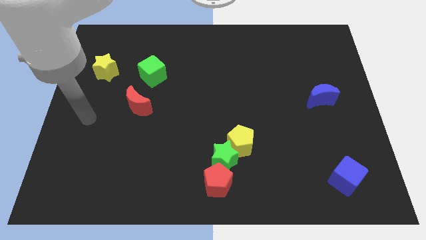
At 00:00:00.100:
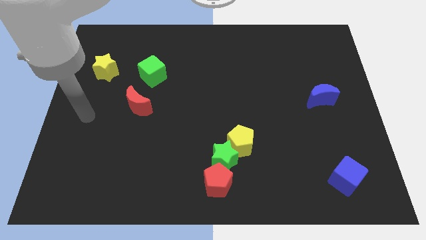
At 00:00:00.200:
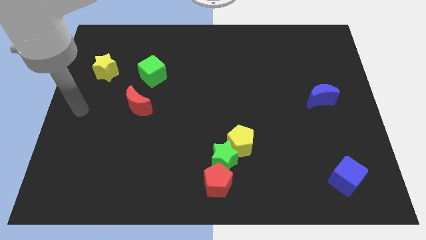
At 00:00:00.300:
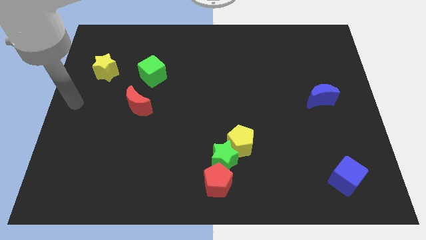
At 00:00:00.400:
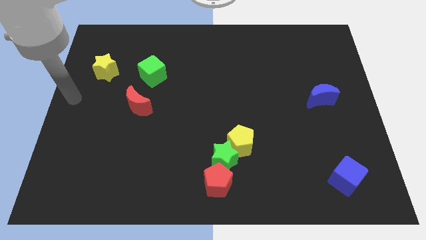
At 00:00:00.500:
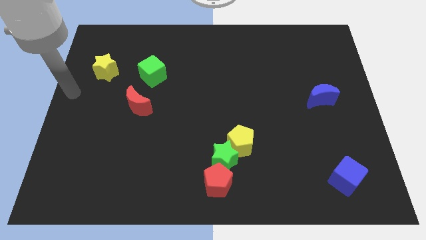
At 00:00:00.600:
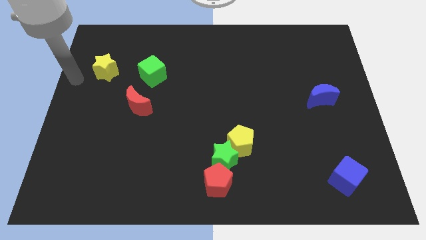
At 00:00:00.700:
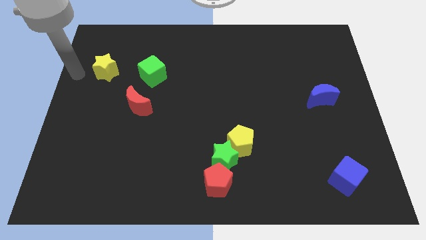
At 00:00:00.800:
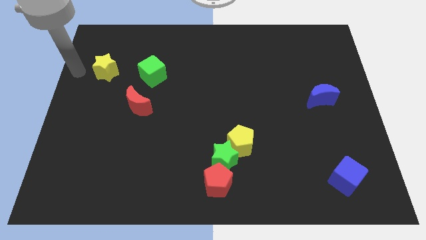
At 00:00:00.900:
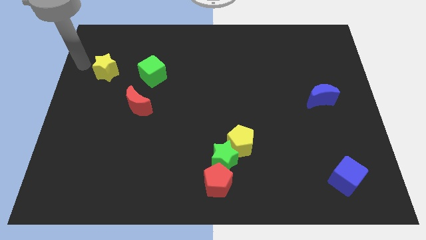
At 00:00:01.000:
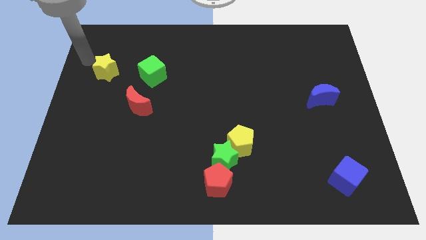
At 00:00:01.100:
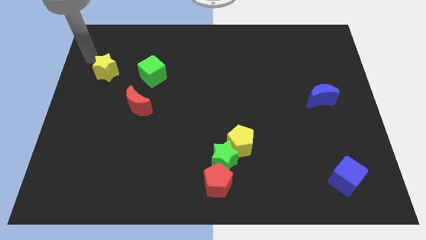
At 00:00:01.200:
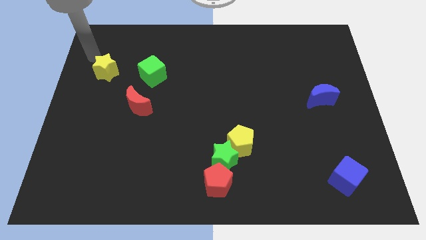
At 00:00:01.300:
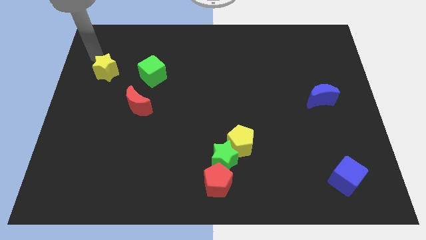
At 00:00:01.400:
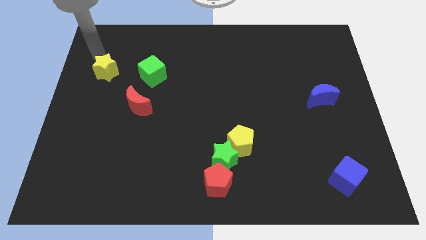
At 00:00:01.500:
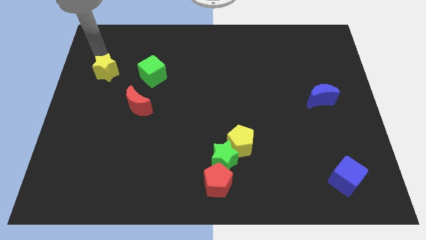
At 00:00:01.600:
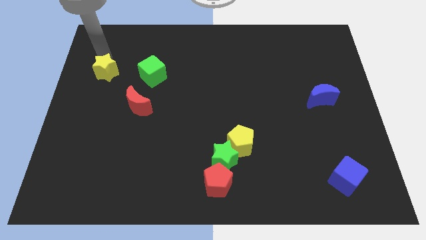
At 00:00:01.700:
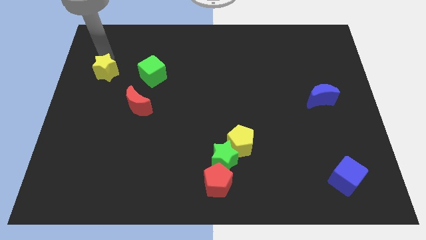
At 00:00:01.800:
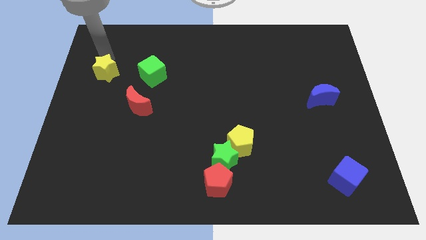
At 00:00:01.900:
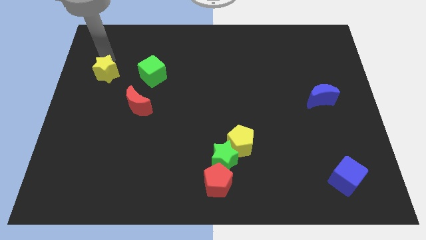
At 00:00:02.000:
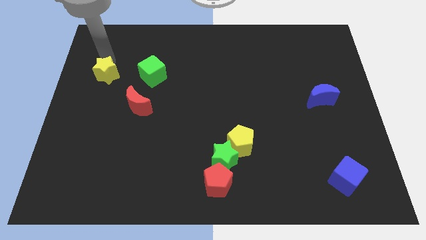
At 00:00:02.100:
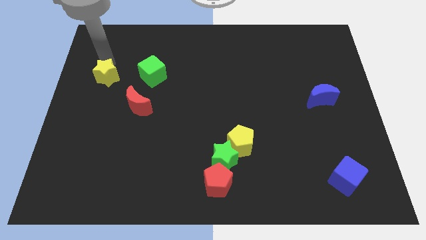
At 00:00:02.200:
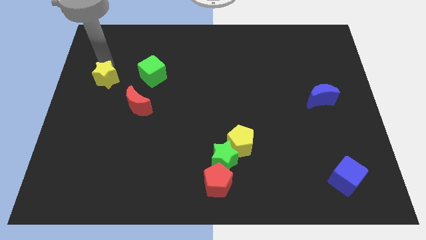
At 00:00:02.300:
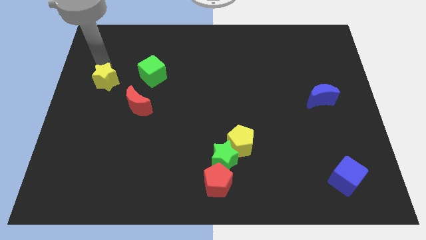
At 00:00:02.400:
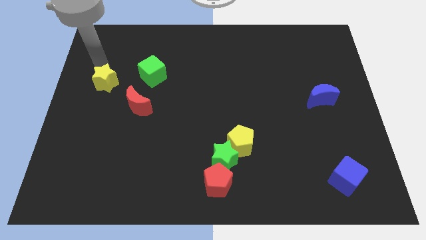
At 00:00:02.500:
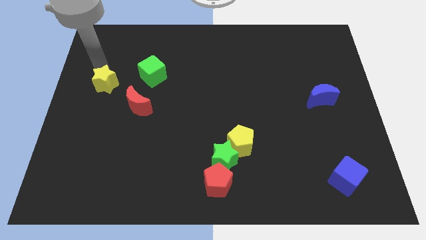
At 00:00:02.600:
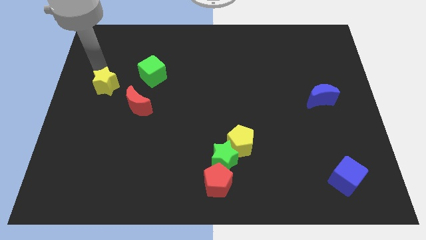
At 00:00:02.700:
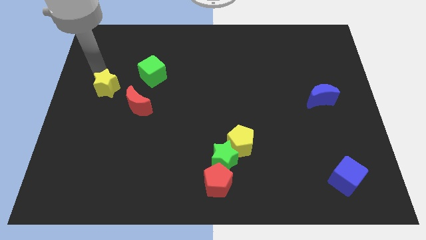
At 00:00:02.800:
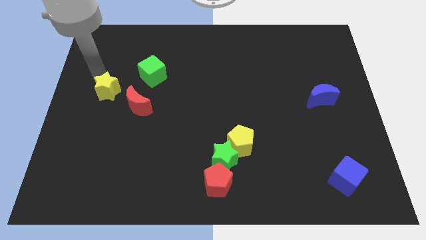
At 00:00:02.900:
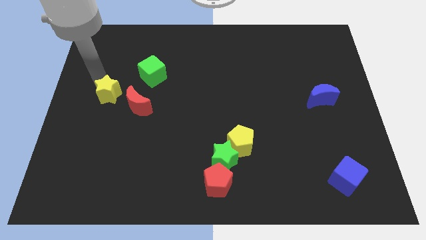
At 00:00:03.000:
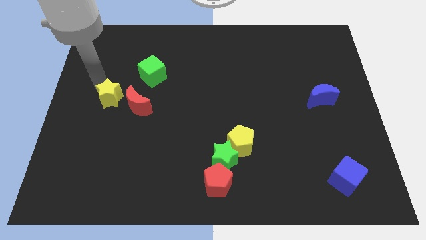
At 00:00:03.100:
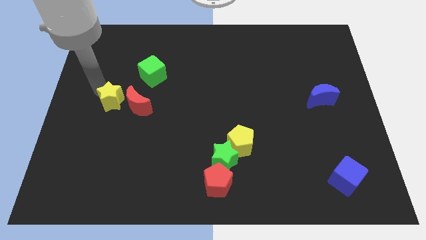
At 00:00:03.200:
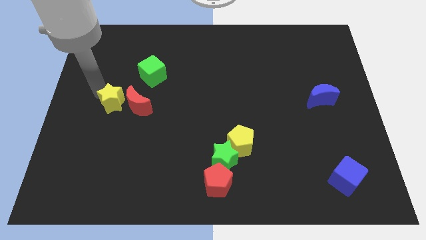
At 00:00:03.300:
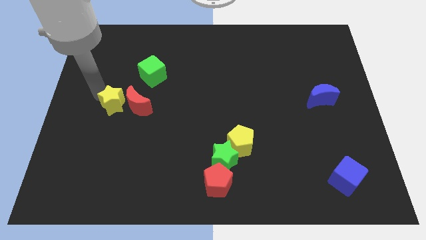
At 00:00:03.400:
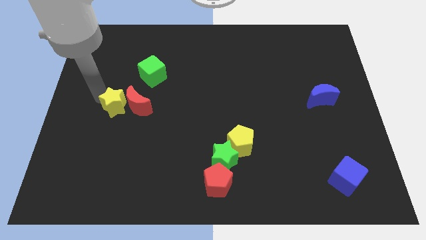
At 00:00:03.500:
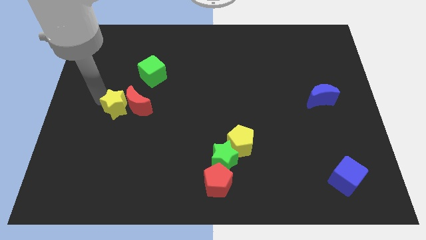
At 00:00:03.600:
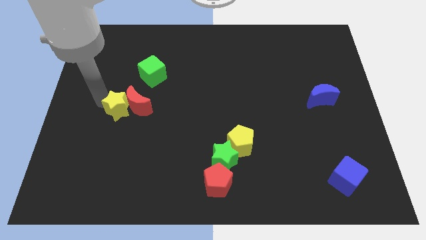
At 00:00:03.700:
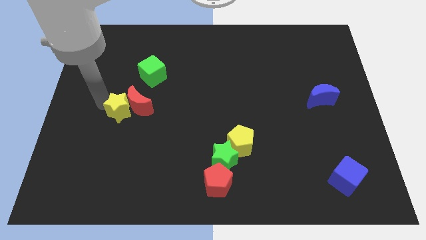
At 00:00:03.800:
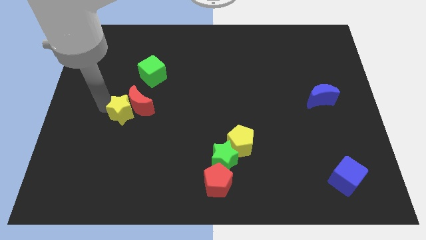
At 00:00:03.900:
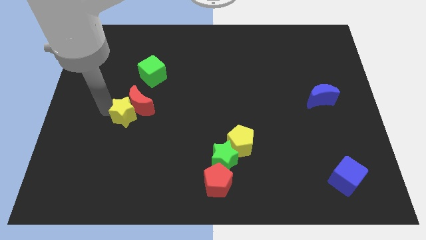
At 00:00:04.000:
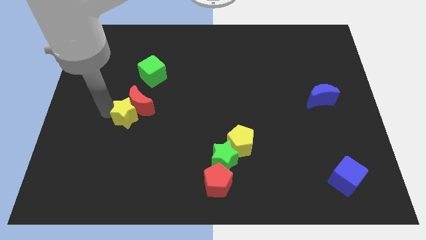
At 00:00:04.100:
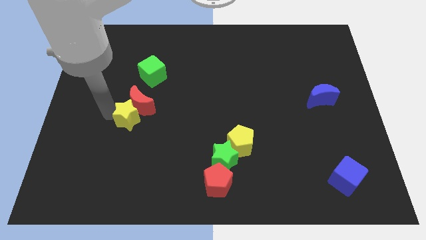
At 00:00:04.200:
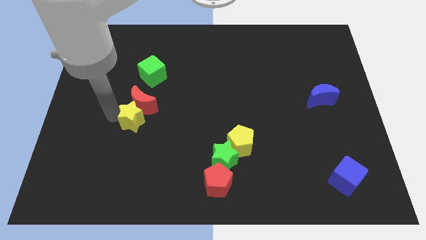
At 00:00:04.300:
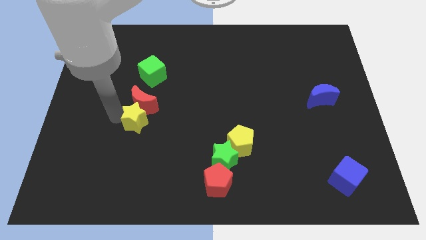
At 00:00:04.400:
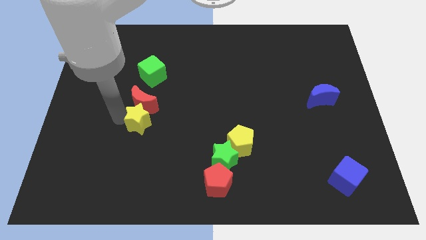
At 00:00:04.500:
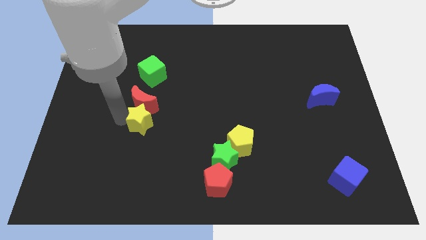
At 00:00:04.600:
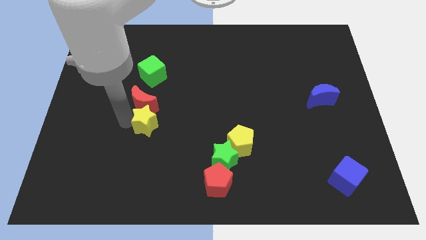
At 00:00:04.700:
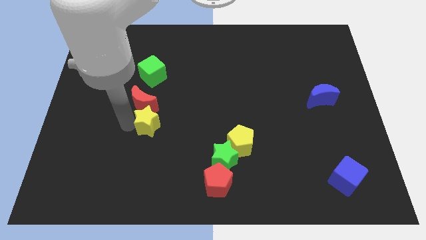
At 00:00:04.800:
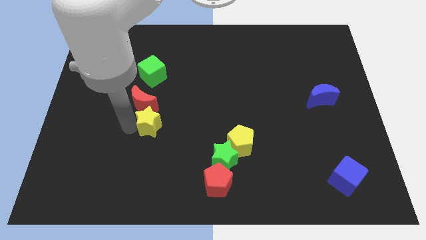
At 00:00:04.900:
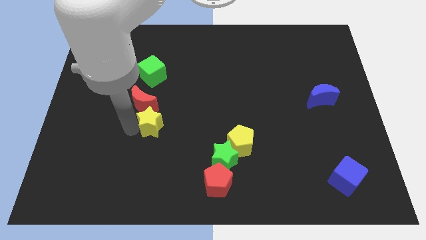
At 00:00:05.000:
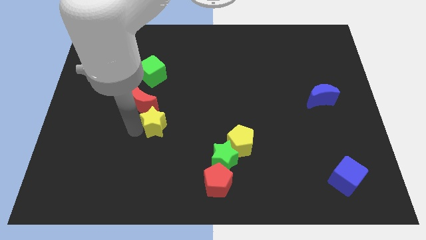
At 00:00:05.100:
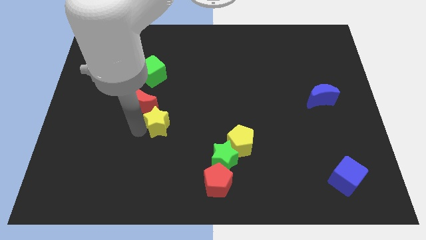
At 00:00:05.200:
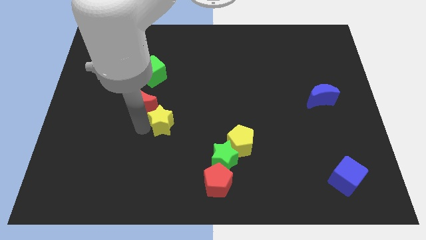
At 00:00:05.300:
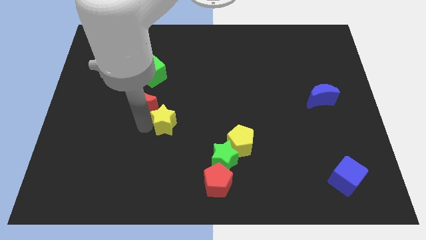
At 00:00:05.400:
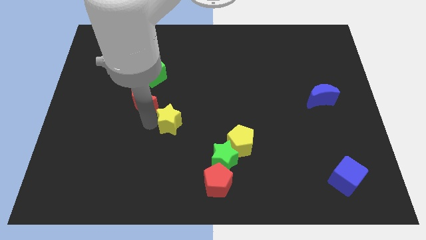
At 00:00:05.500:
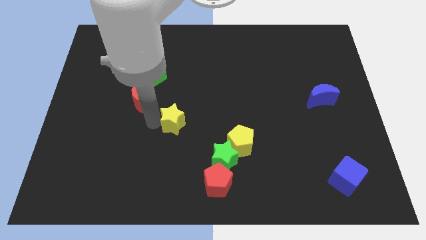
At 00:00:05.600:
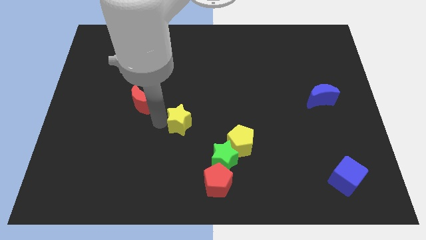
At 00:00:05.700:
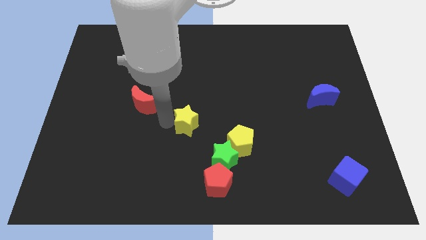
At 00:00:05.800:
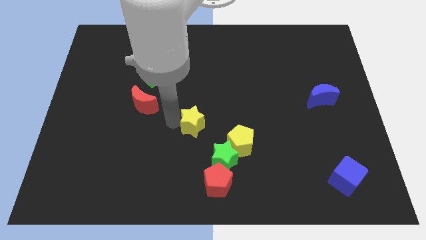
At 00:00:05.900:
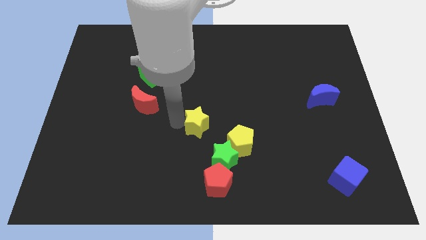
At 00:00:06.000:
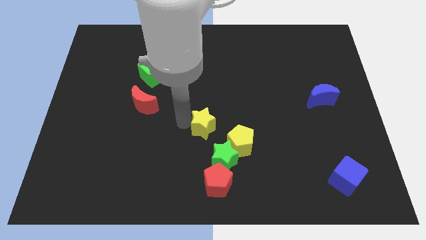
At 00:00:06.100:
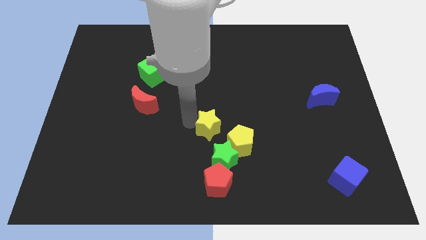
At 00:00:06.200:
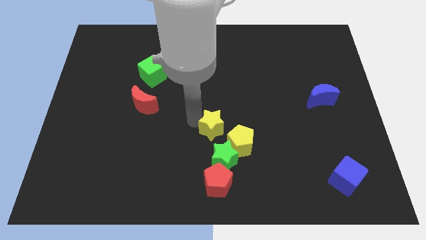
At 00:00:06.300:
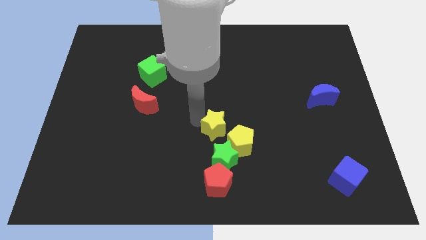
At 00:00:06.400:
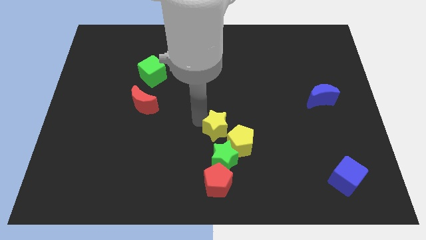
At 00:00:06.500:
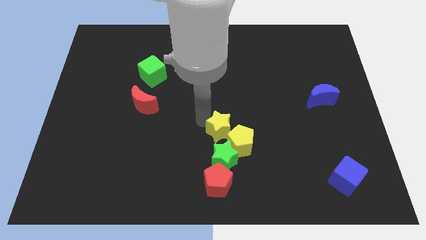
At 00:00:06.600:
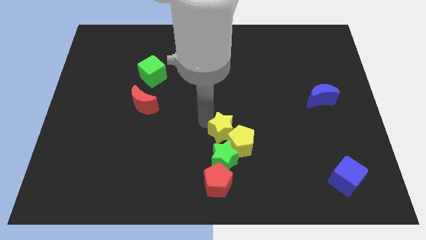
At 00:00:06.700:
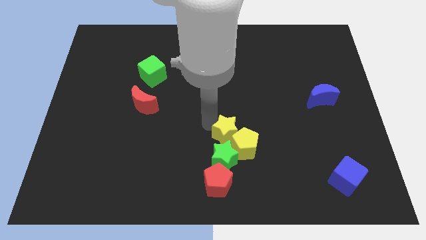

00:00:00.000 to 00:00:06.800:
slide the yellow star close to the yellow pentagon

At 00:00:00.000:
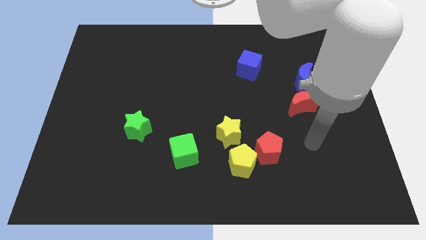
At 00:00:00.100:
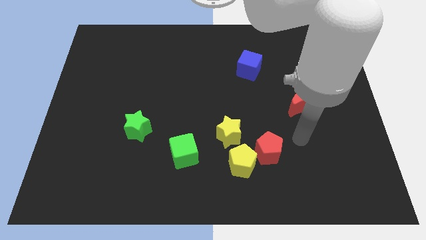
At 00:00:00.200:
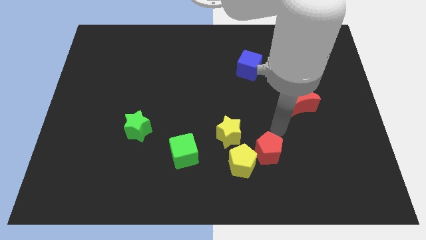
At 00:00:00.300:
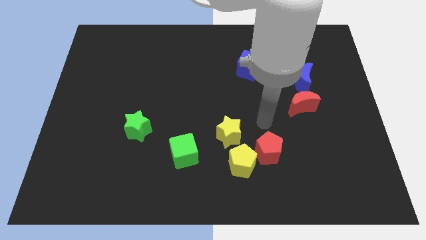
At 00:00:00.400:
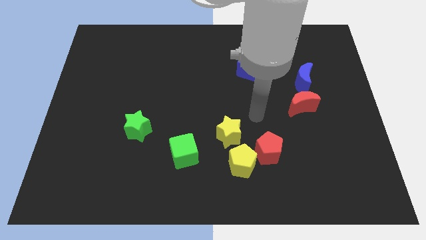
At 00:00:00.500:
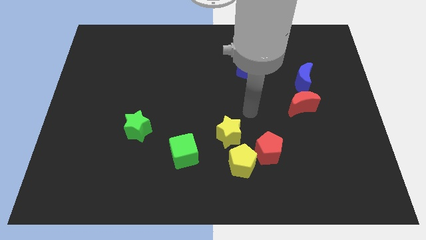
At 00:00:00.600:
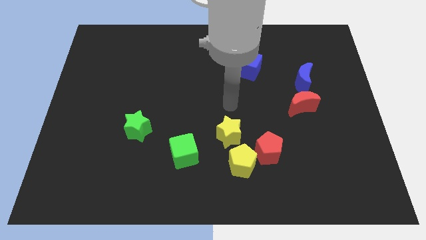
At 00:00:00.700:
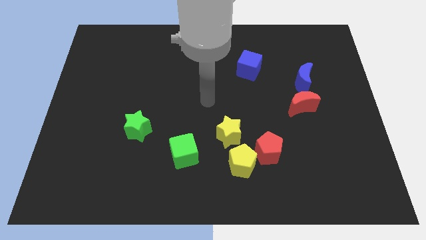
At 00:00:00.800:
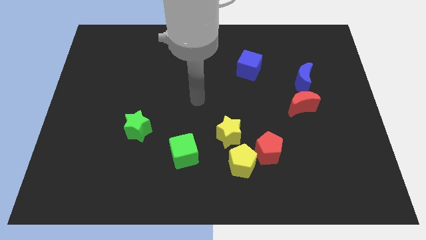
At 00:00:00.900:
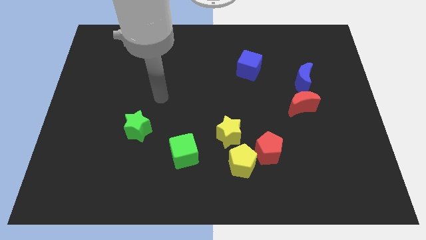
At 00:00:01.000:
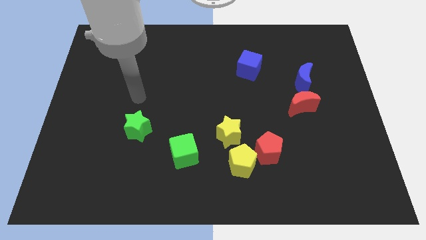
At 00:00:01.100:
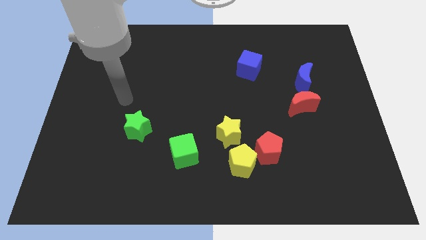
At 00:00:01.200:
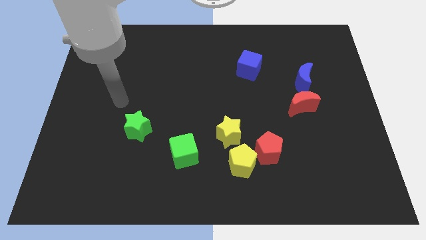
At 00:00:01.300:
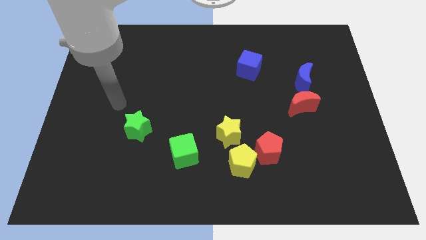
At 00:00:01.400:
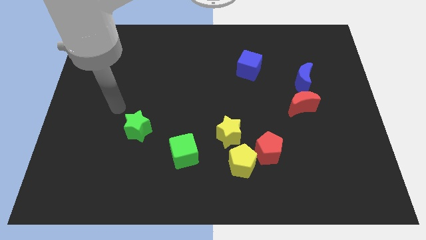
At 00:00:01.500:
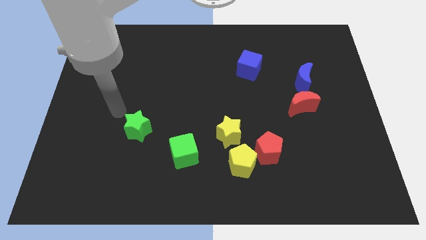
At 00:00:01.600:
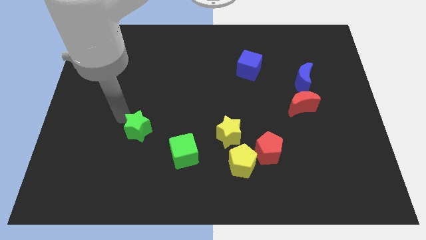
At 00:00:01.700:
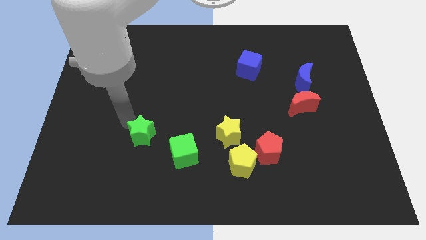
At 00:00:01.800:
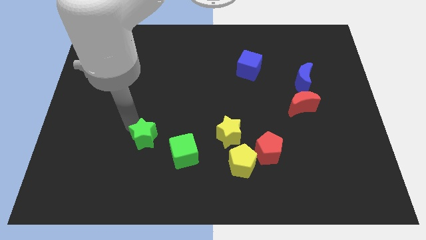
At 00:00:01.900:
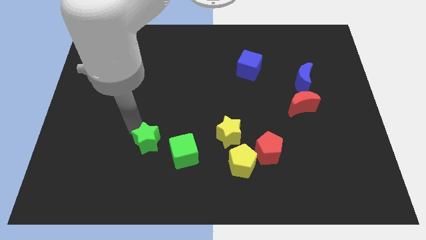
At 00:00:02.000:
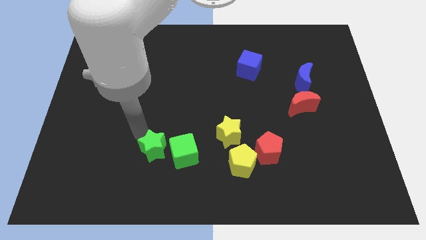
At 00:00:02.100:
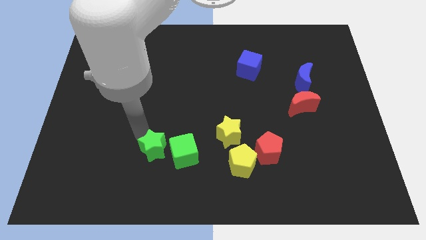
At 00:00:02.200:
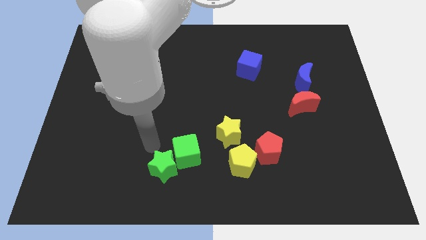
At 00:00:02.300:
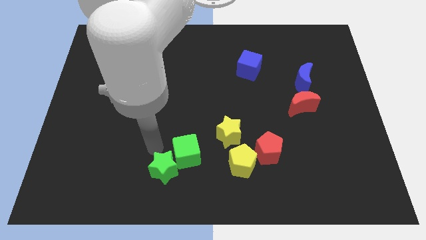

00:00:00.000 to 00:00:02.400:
push the green star towards the green cube
